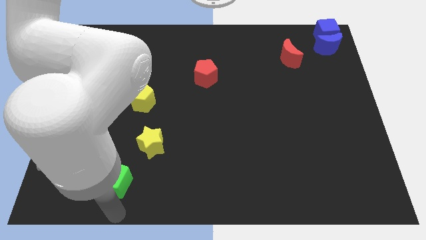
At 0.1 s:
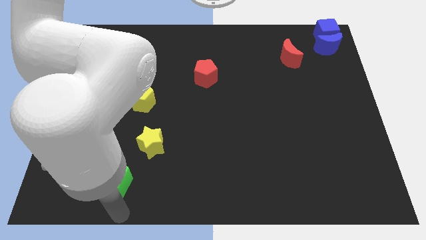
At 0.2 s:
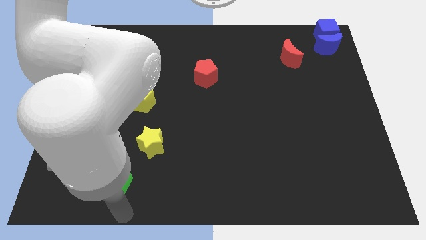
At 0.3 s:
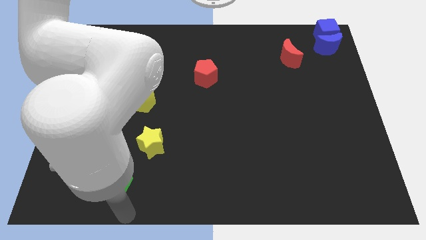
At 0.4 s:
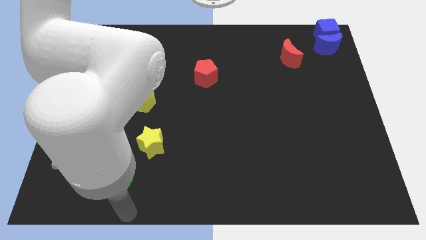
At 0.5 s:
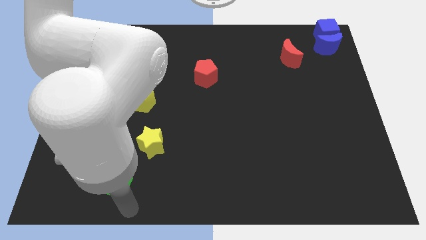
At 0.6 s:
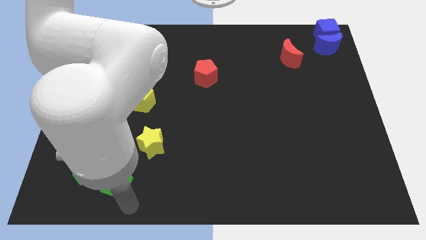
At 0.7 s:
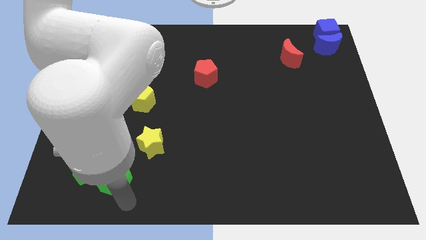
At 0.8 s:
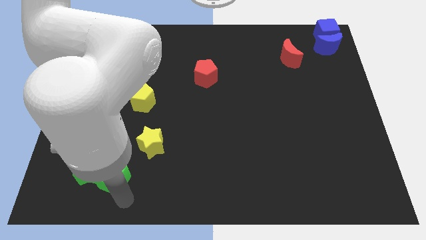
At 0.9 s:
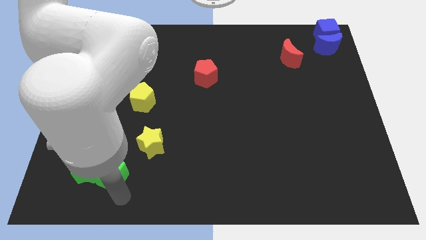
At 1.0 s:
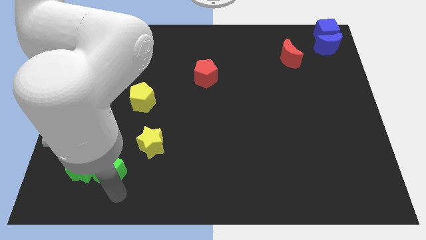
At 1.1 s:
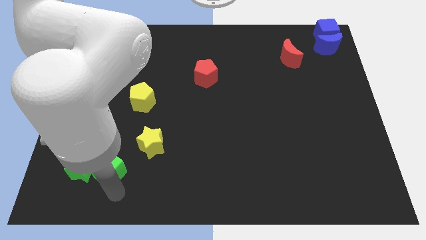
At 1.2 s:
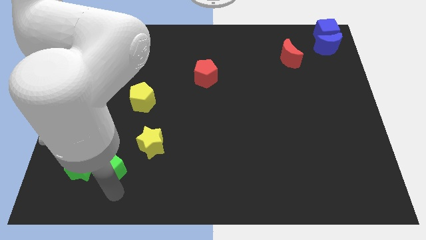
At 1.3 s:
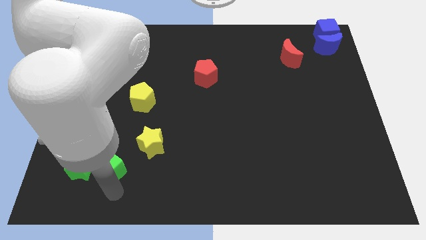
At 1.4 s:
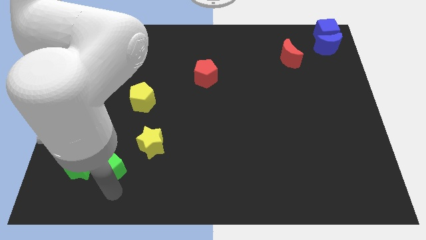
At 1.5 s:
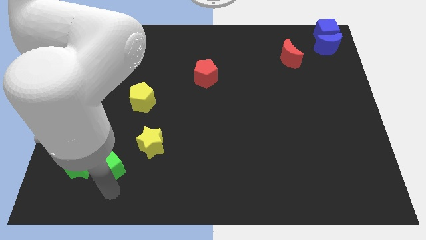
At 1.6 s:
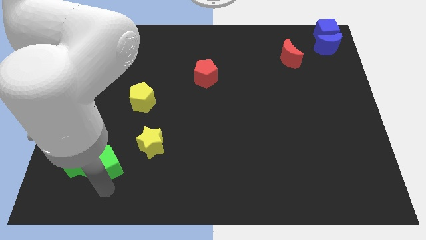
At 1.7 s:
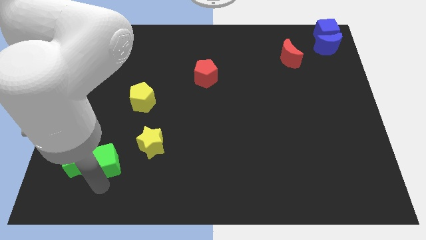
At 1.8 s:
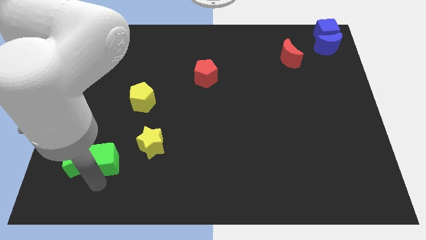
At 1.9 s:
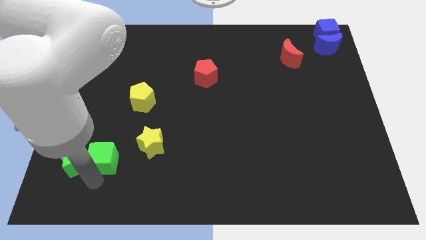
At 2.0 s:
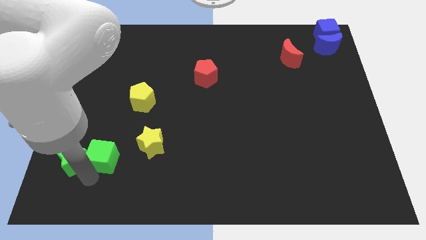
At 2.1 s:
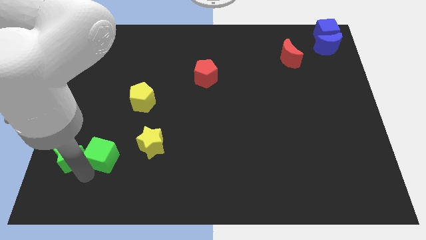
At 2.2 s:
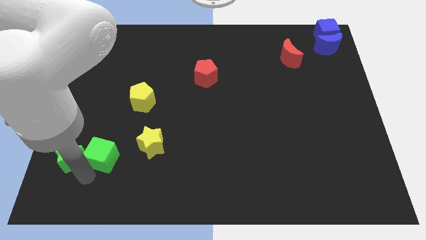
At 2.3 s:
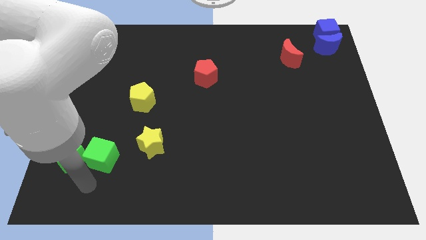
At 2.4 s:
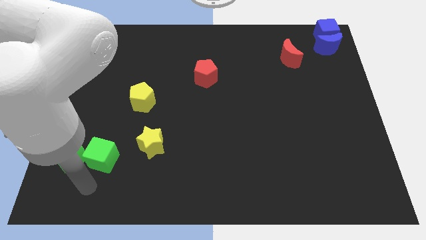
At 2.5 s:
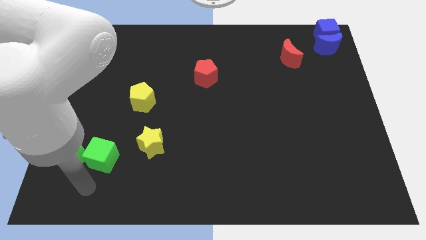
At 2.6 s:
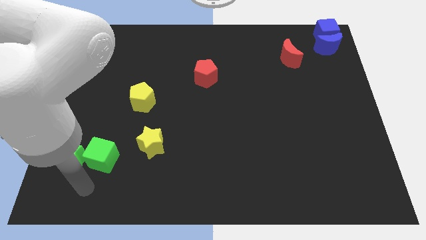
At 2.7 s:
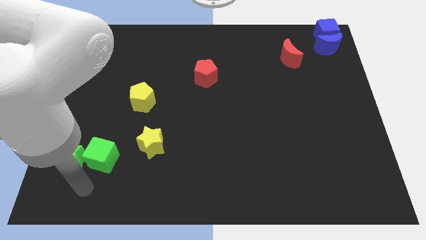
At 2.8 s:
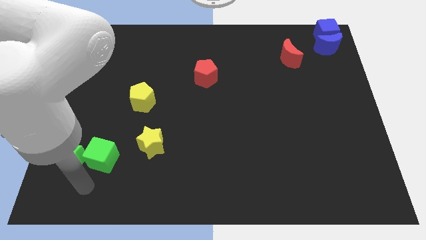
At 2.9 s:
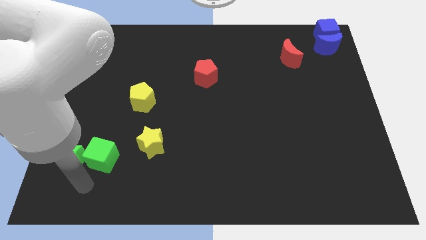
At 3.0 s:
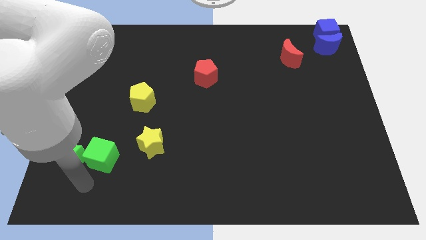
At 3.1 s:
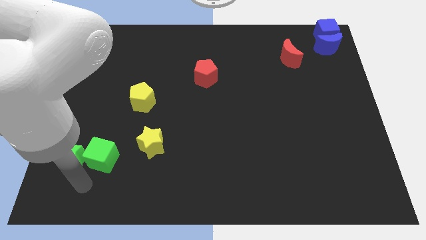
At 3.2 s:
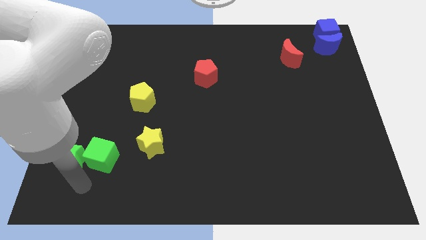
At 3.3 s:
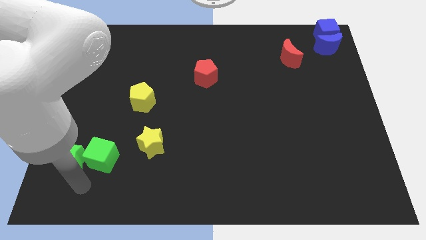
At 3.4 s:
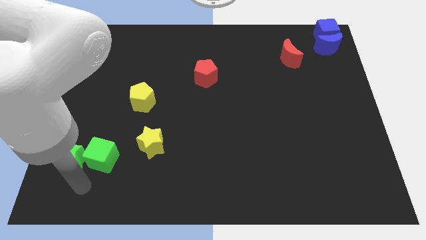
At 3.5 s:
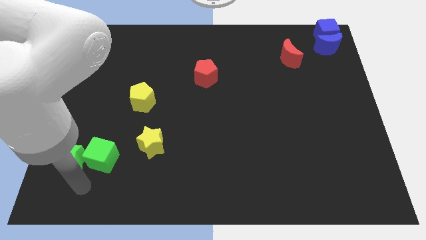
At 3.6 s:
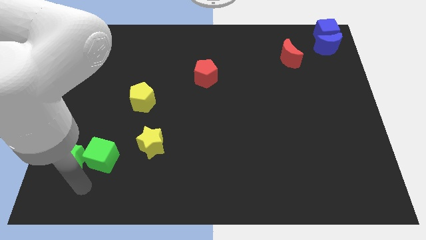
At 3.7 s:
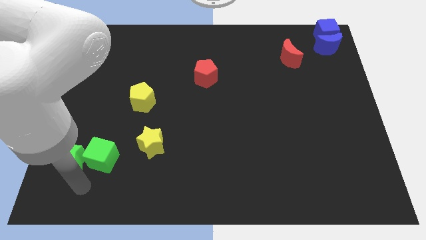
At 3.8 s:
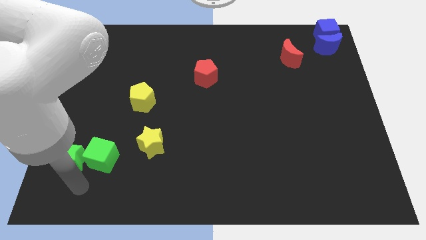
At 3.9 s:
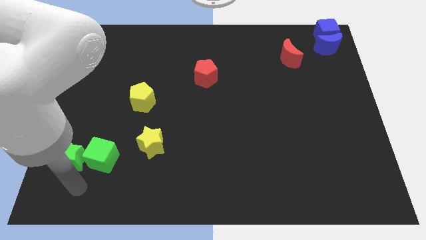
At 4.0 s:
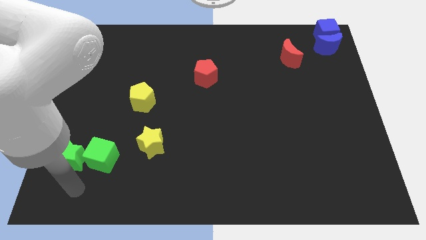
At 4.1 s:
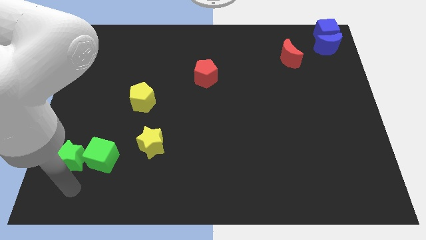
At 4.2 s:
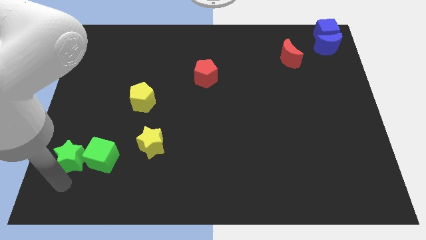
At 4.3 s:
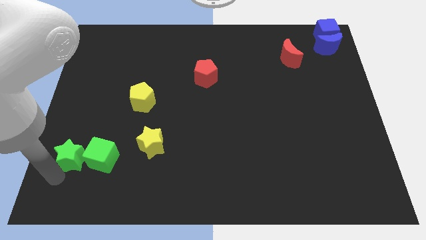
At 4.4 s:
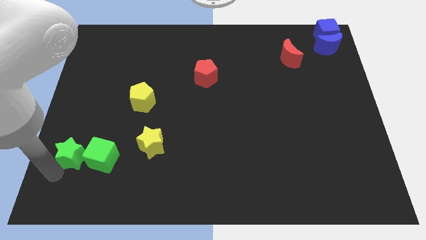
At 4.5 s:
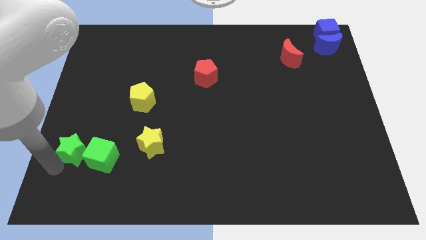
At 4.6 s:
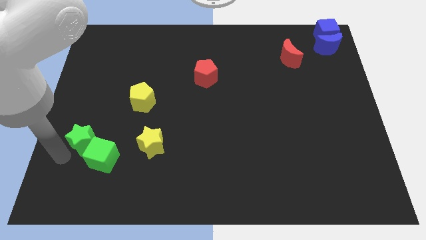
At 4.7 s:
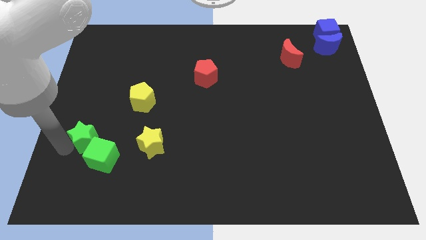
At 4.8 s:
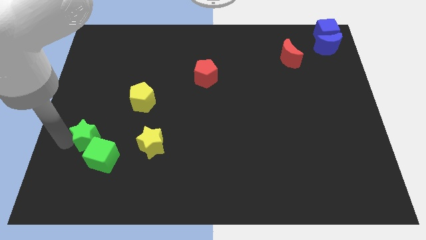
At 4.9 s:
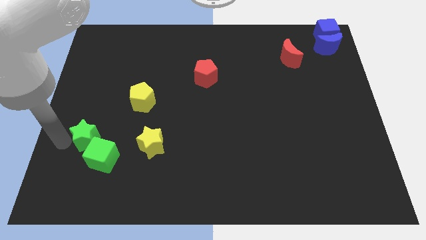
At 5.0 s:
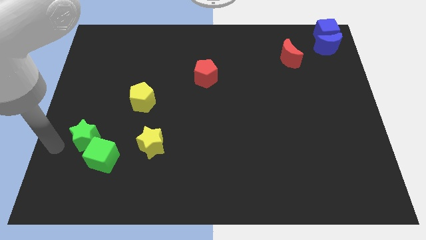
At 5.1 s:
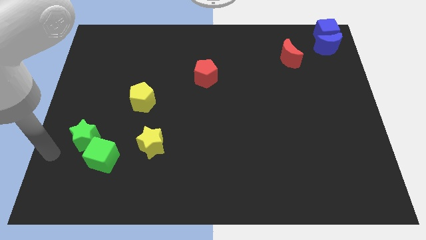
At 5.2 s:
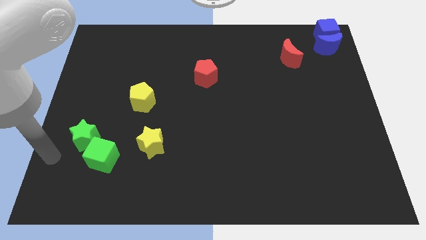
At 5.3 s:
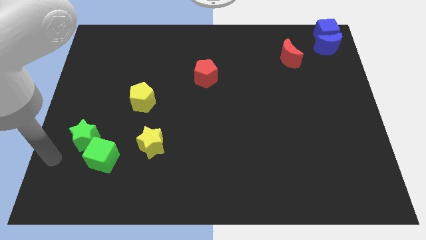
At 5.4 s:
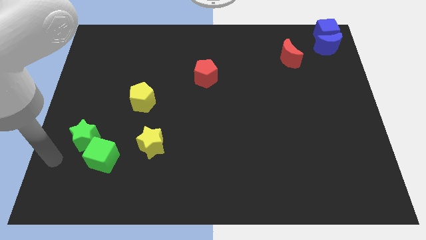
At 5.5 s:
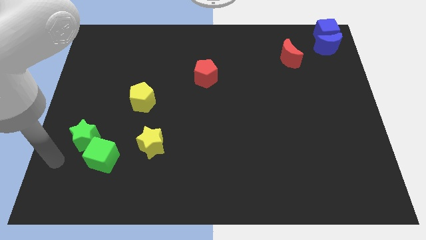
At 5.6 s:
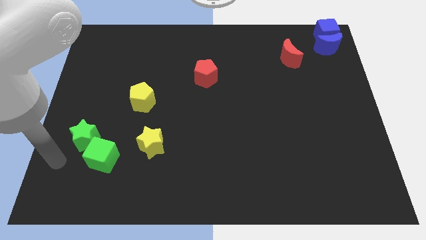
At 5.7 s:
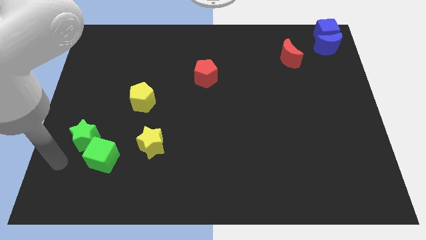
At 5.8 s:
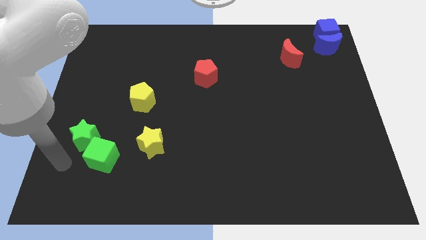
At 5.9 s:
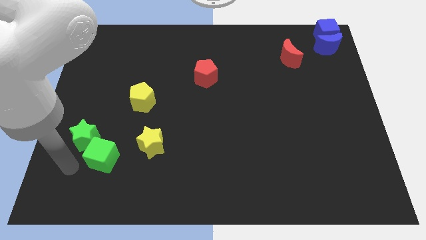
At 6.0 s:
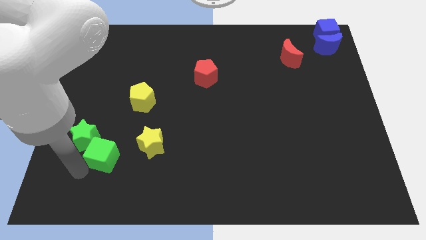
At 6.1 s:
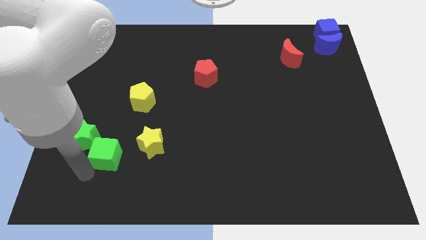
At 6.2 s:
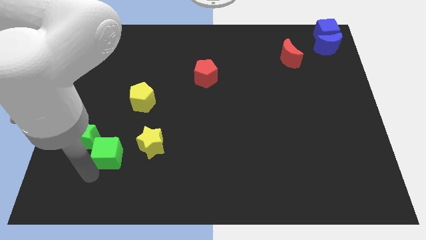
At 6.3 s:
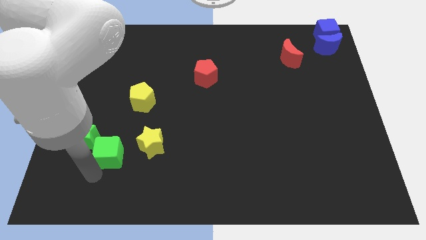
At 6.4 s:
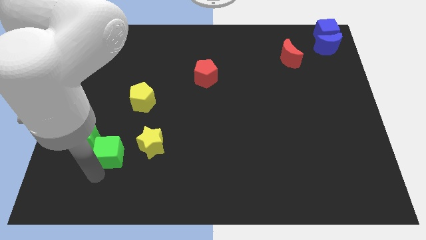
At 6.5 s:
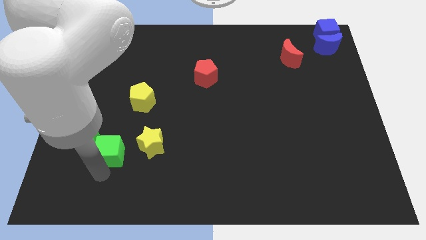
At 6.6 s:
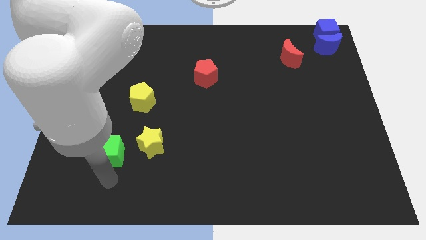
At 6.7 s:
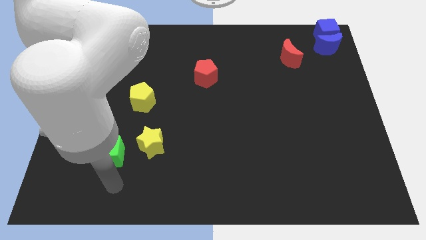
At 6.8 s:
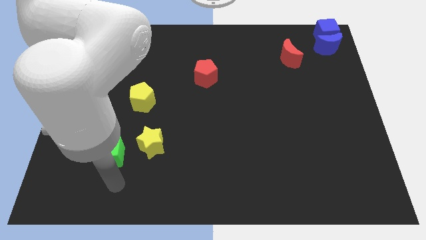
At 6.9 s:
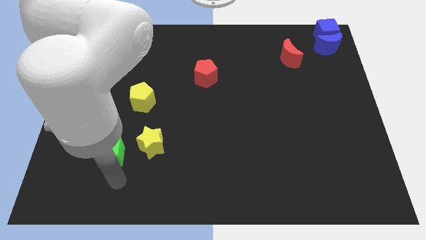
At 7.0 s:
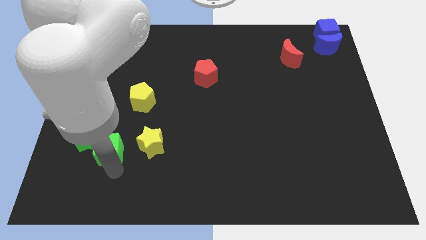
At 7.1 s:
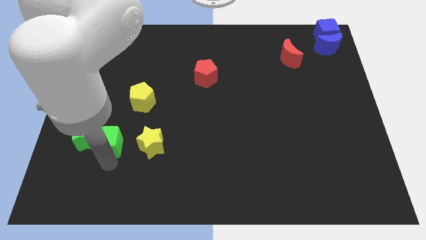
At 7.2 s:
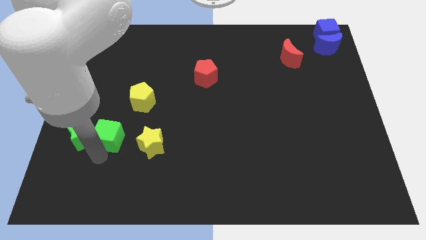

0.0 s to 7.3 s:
move the group of green blocks upwards

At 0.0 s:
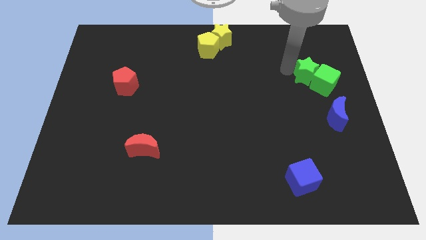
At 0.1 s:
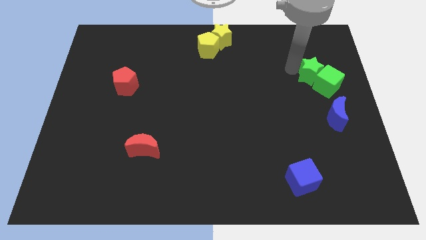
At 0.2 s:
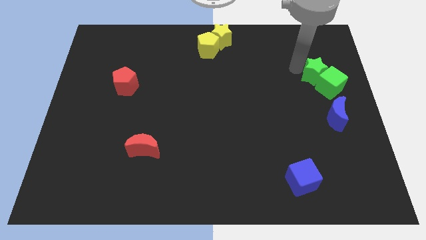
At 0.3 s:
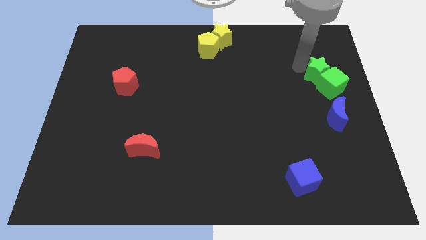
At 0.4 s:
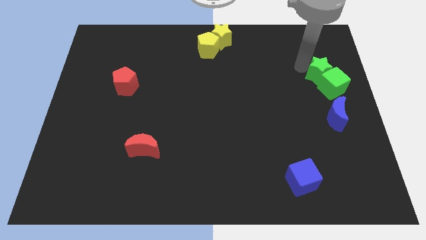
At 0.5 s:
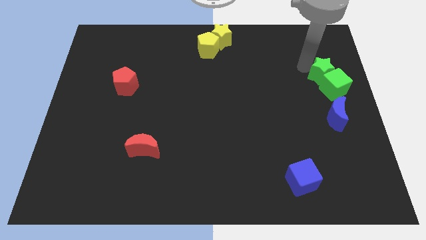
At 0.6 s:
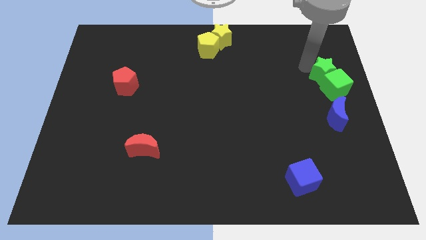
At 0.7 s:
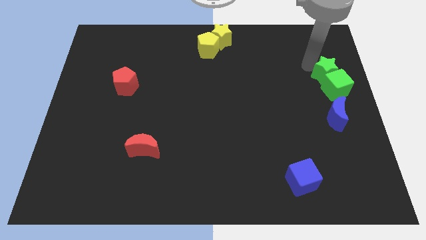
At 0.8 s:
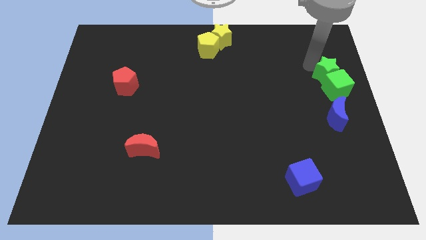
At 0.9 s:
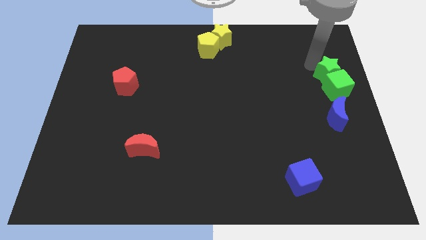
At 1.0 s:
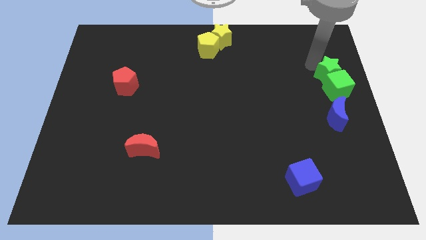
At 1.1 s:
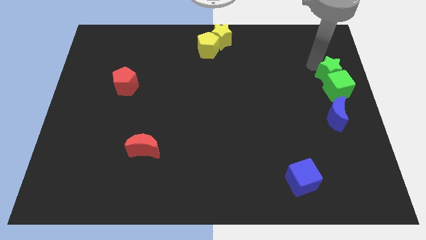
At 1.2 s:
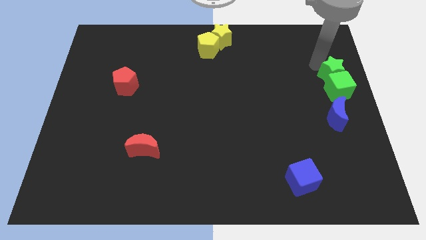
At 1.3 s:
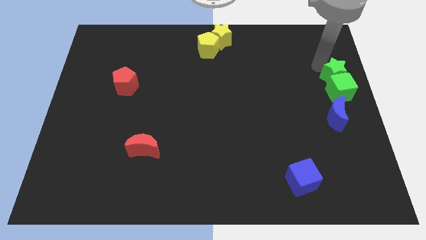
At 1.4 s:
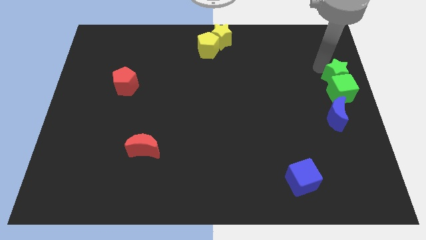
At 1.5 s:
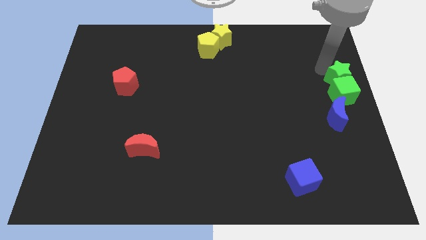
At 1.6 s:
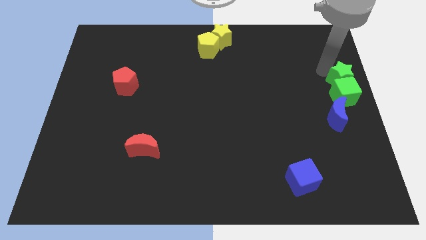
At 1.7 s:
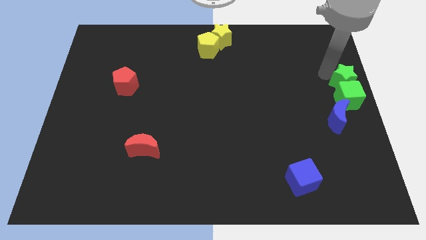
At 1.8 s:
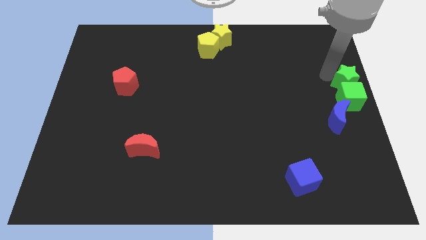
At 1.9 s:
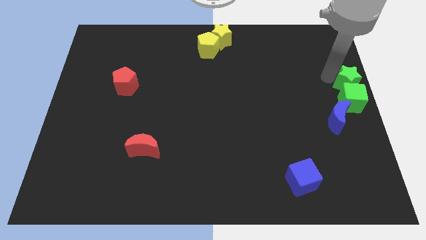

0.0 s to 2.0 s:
place the green blocks to the top of blue moon
